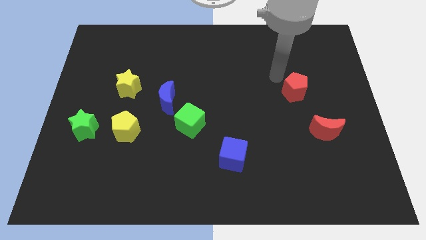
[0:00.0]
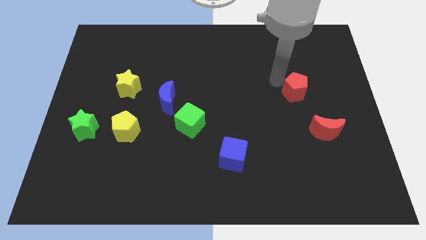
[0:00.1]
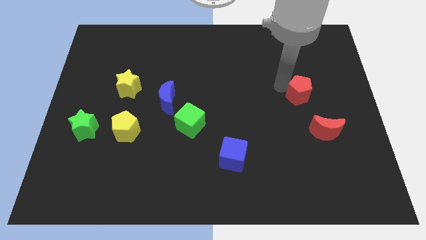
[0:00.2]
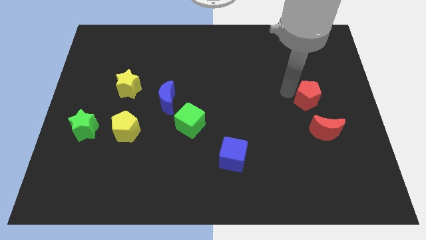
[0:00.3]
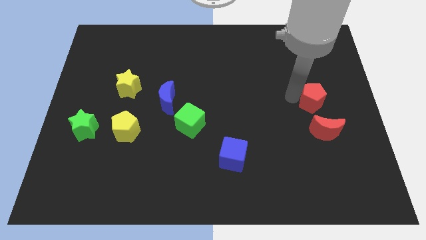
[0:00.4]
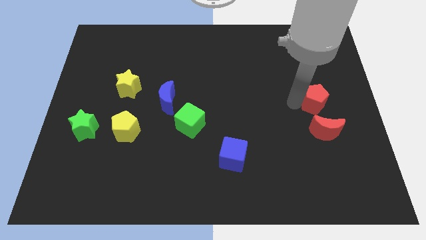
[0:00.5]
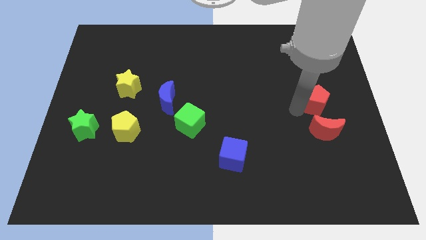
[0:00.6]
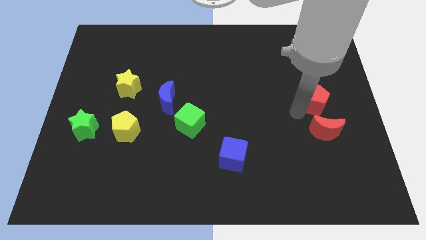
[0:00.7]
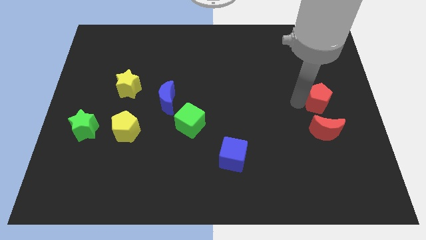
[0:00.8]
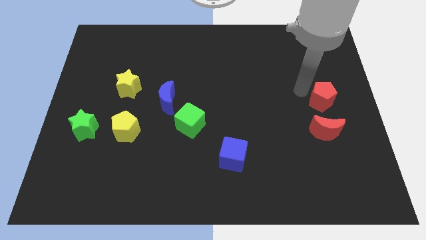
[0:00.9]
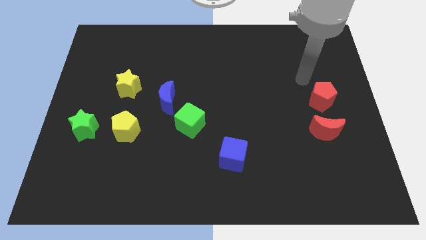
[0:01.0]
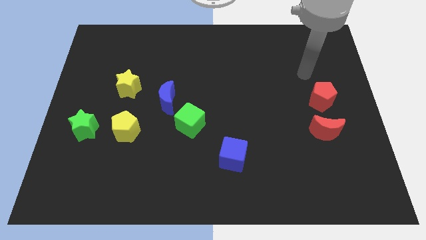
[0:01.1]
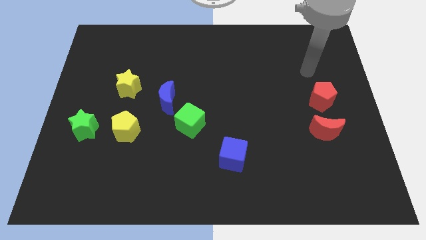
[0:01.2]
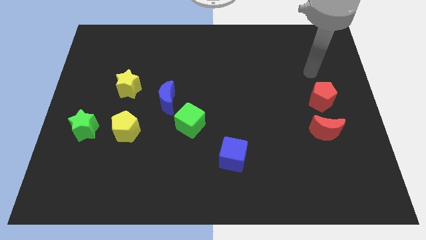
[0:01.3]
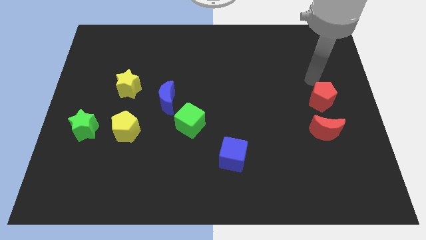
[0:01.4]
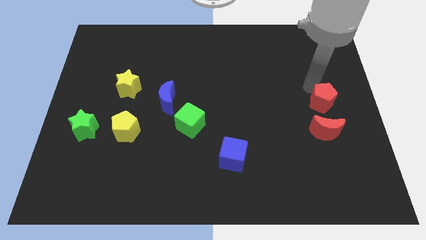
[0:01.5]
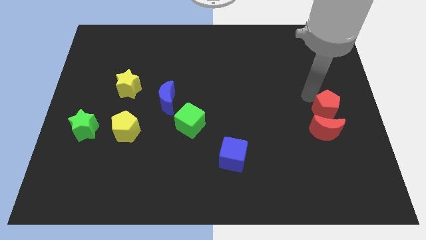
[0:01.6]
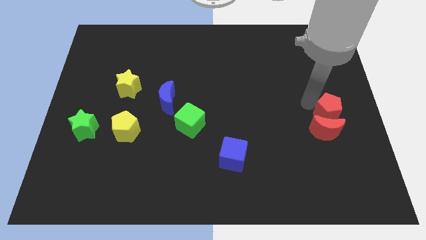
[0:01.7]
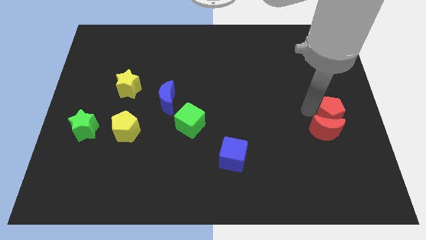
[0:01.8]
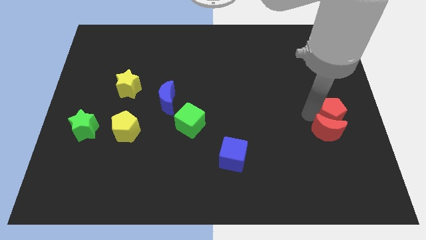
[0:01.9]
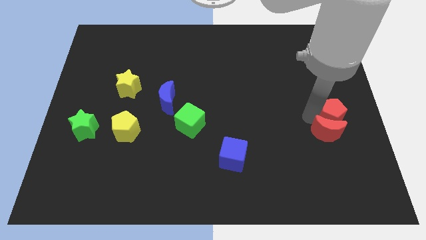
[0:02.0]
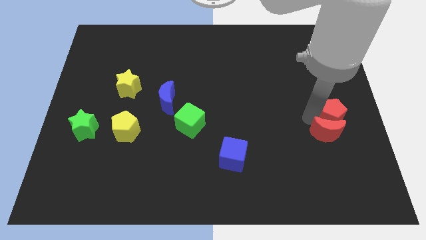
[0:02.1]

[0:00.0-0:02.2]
push the red pentagon into the red crescent

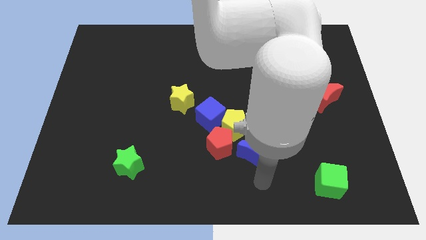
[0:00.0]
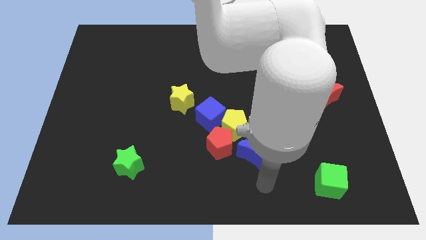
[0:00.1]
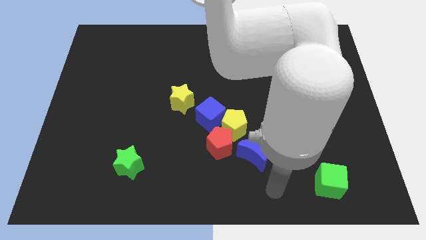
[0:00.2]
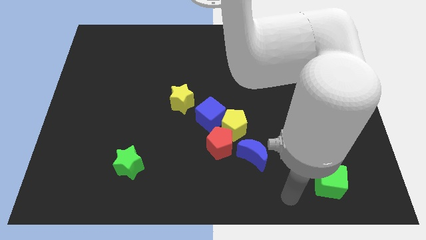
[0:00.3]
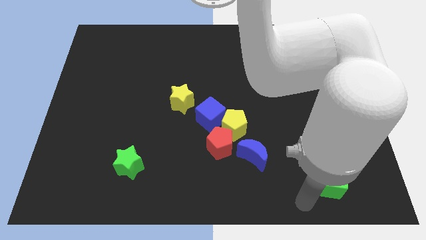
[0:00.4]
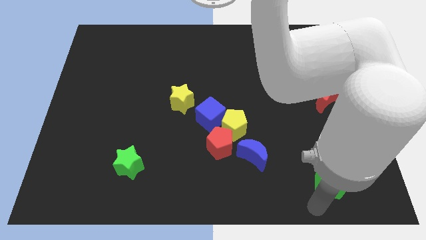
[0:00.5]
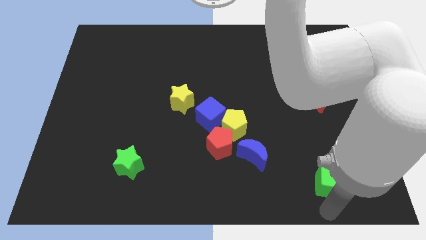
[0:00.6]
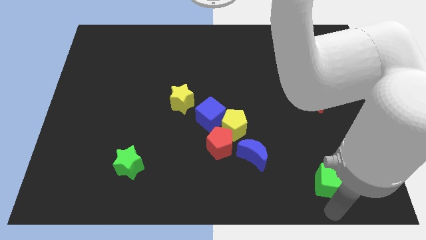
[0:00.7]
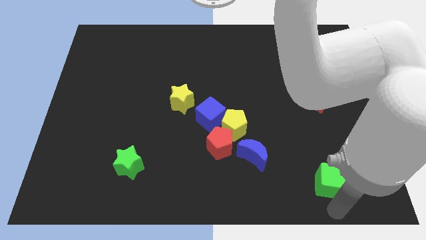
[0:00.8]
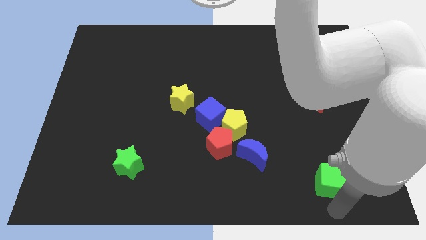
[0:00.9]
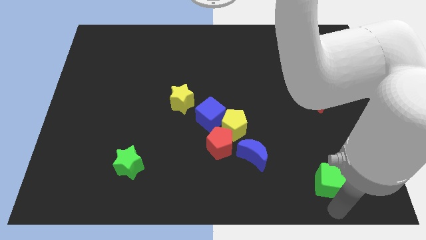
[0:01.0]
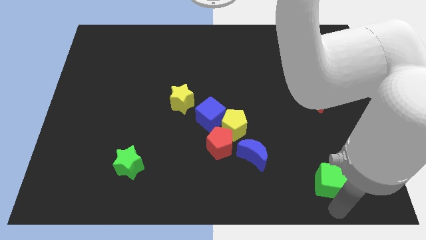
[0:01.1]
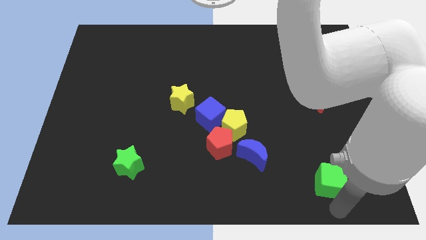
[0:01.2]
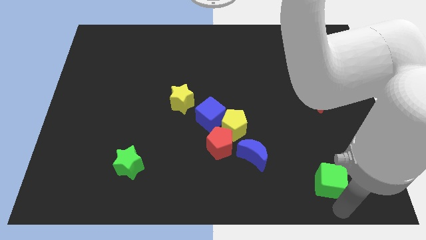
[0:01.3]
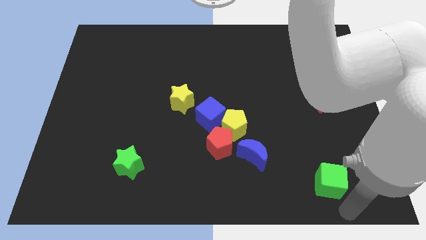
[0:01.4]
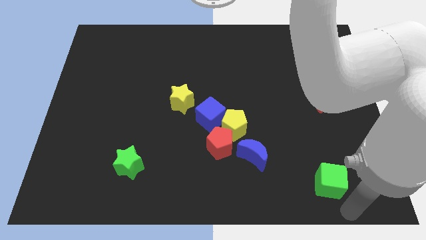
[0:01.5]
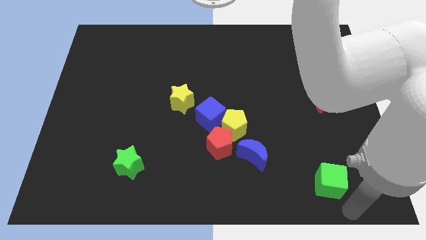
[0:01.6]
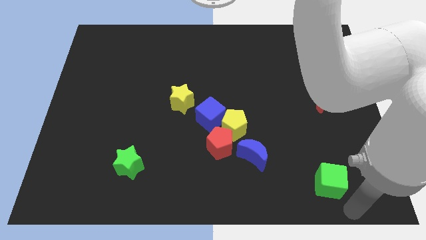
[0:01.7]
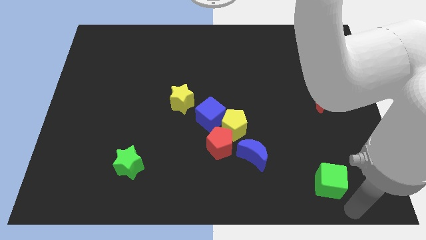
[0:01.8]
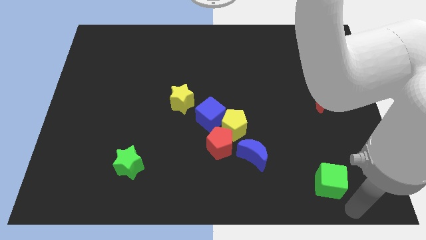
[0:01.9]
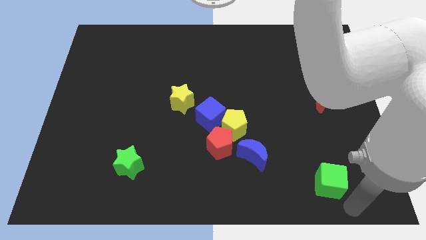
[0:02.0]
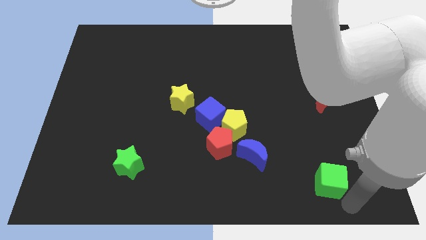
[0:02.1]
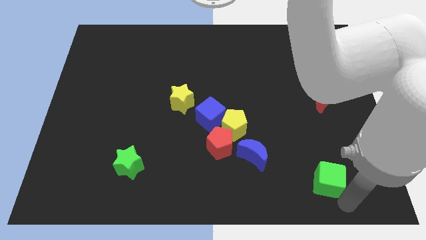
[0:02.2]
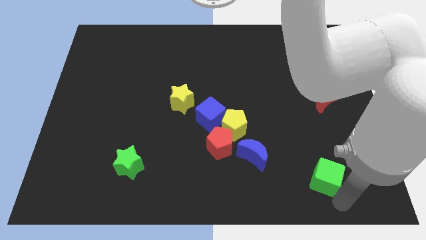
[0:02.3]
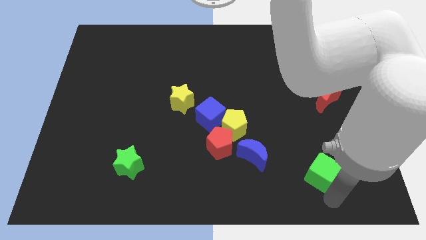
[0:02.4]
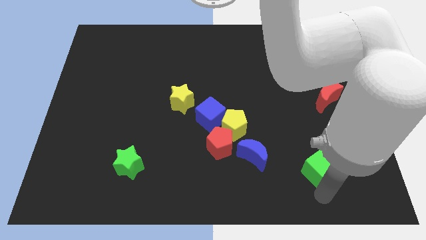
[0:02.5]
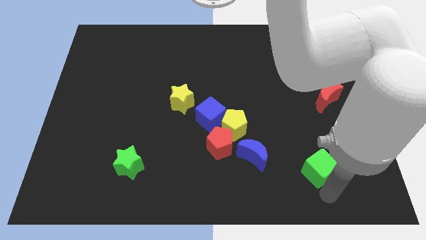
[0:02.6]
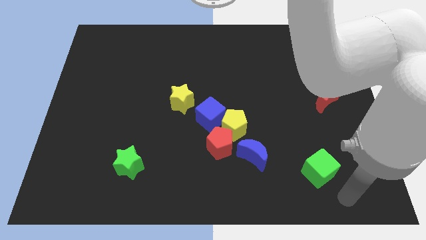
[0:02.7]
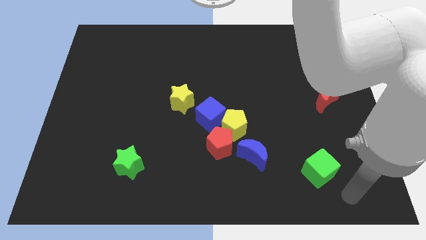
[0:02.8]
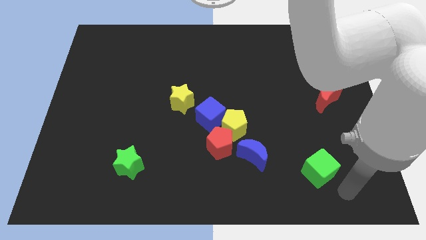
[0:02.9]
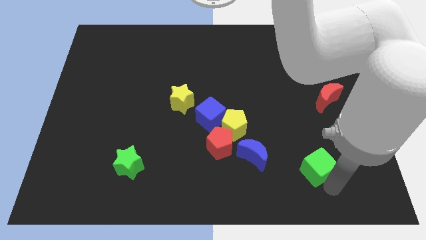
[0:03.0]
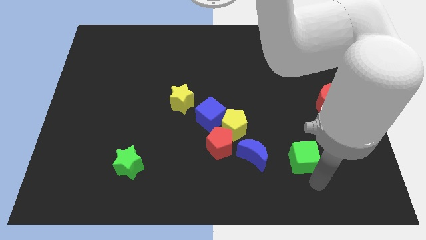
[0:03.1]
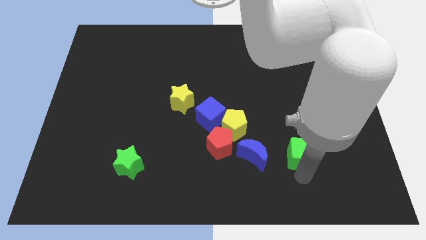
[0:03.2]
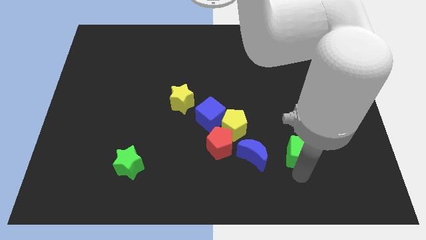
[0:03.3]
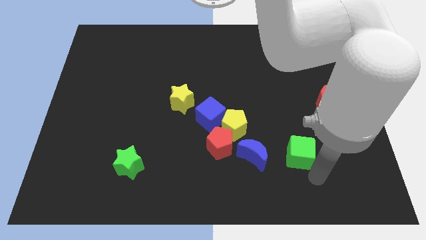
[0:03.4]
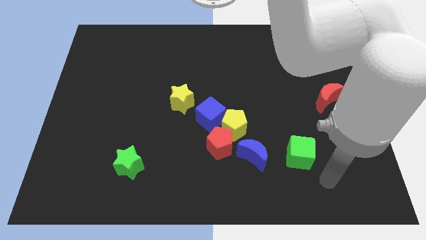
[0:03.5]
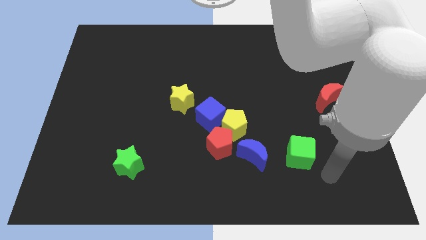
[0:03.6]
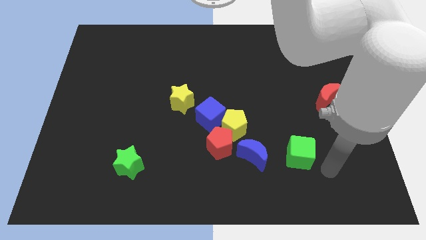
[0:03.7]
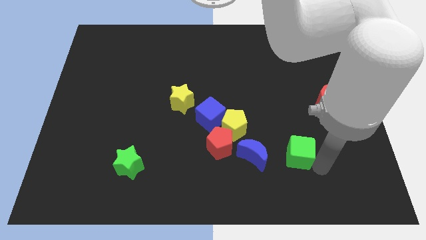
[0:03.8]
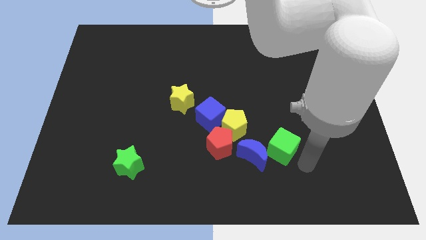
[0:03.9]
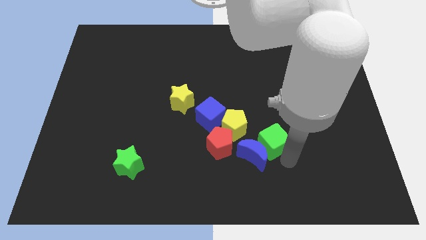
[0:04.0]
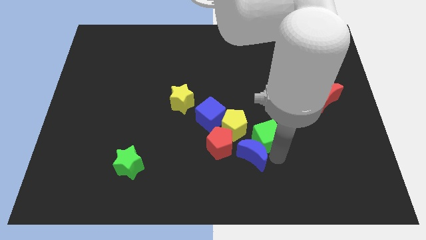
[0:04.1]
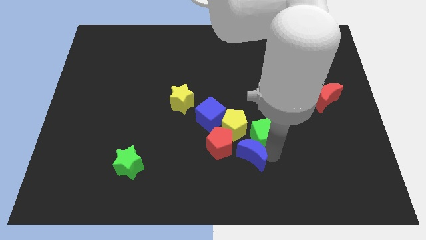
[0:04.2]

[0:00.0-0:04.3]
push green cube to the right of yellow pentagon

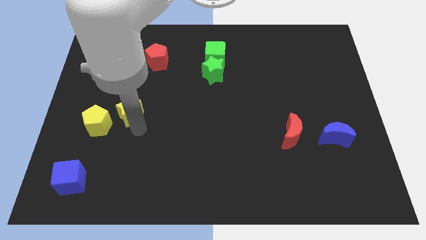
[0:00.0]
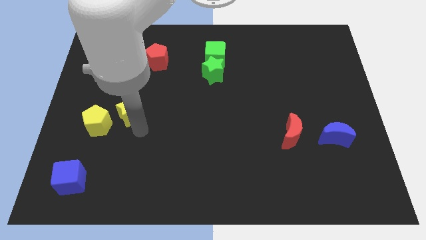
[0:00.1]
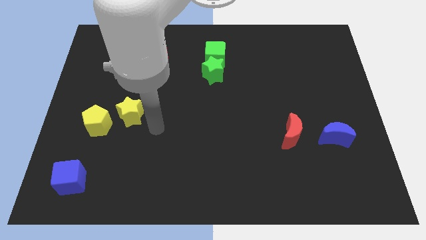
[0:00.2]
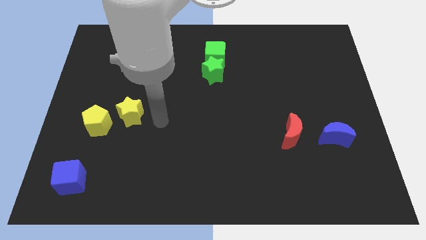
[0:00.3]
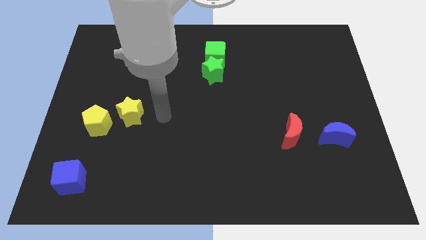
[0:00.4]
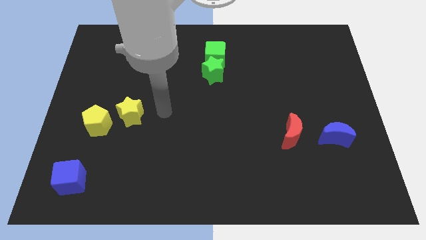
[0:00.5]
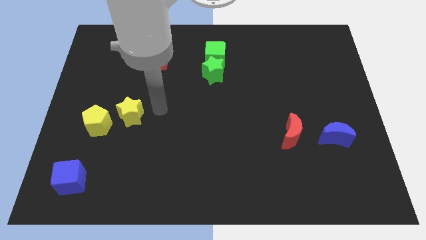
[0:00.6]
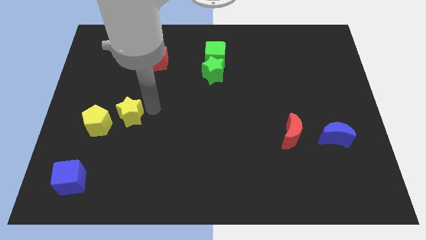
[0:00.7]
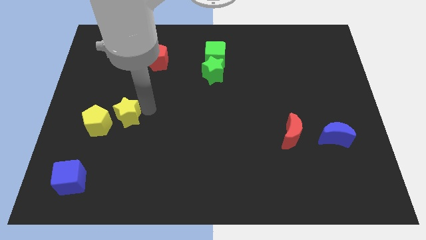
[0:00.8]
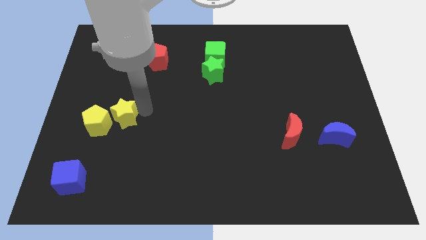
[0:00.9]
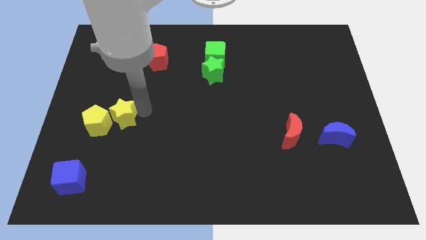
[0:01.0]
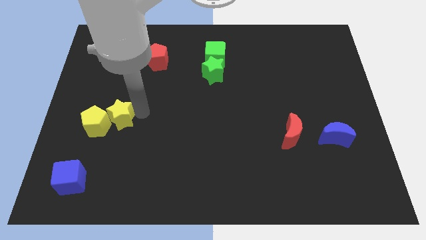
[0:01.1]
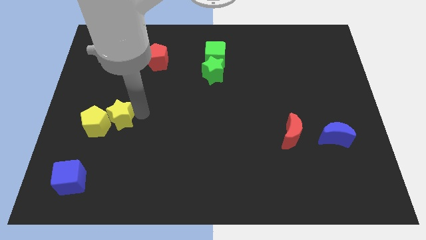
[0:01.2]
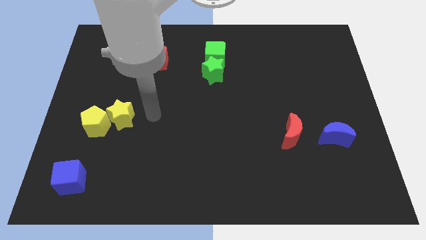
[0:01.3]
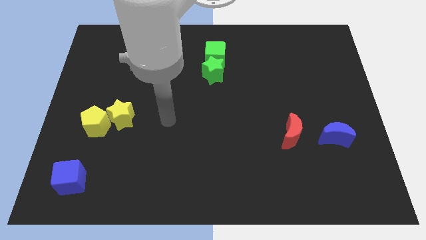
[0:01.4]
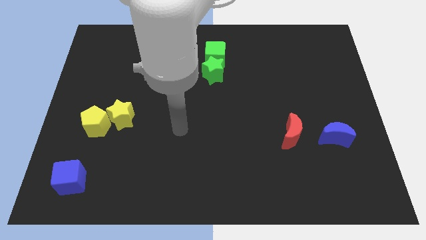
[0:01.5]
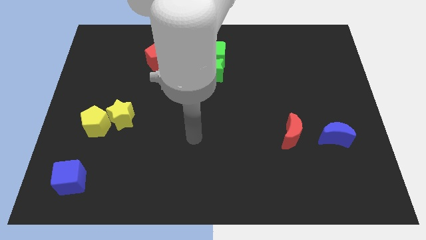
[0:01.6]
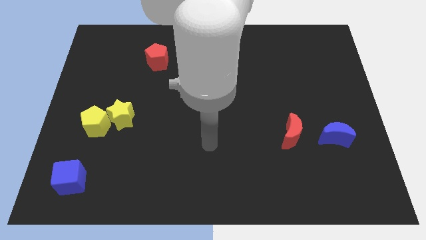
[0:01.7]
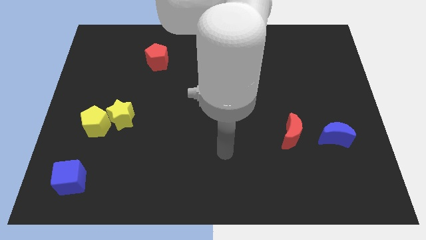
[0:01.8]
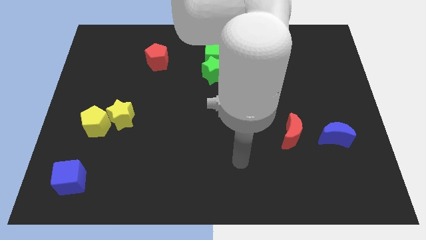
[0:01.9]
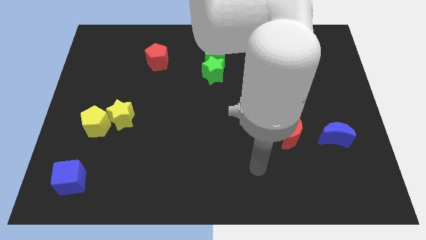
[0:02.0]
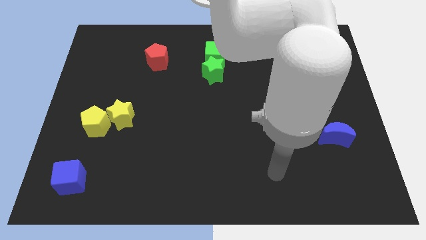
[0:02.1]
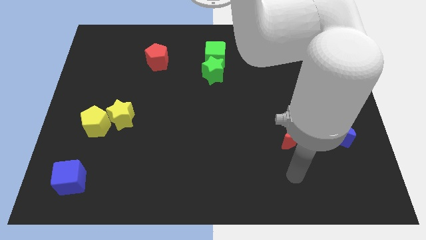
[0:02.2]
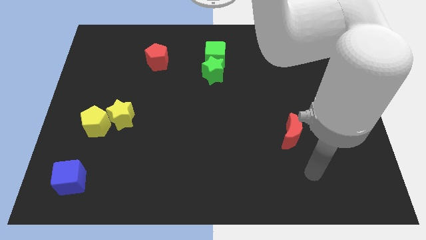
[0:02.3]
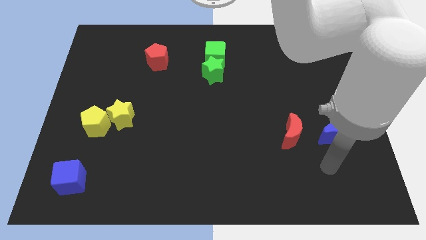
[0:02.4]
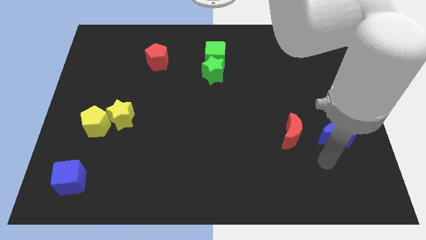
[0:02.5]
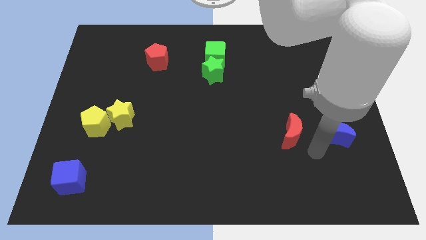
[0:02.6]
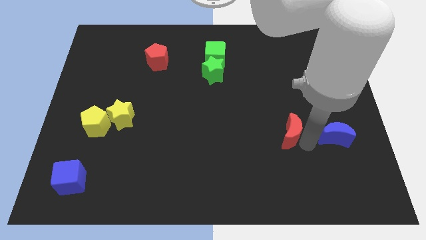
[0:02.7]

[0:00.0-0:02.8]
push the yellow star into the yellow pentagon
